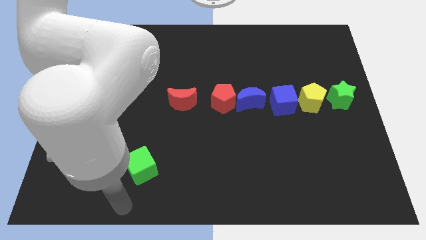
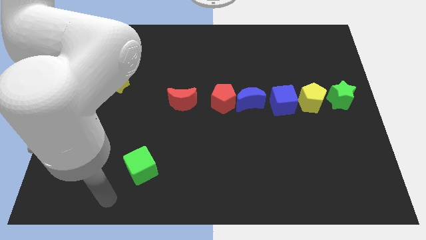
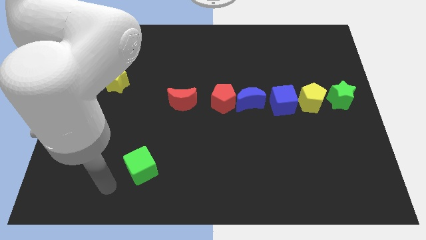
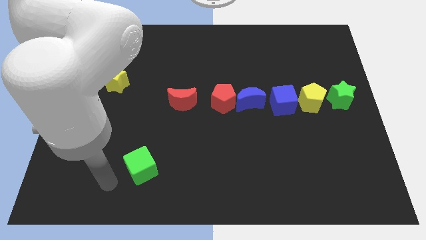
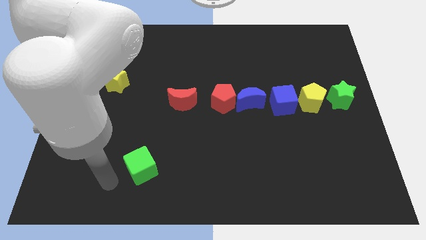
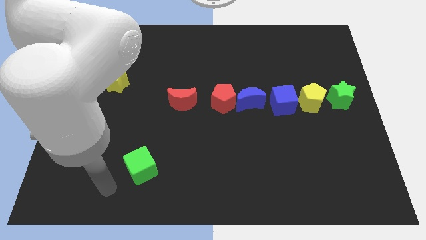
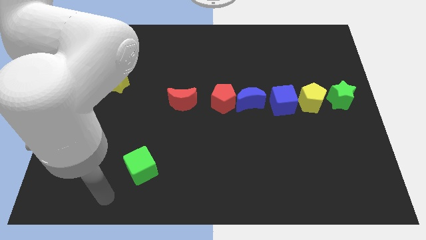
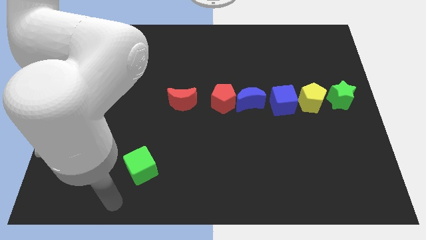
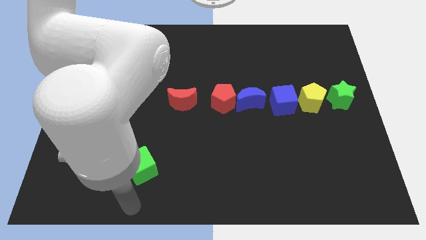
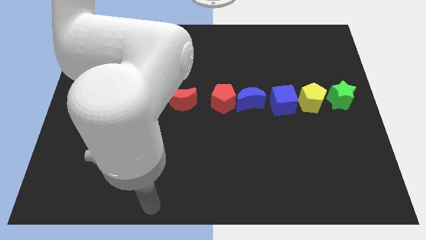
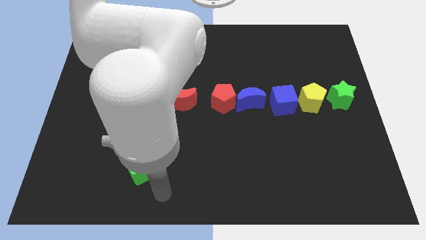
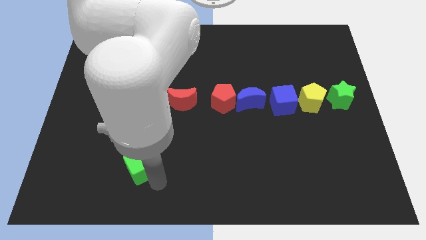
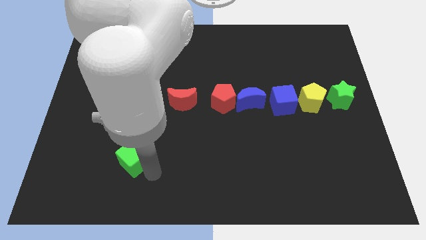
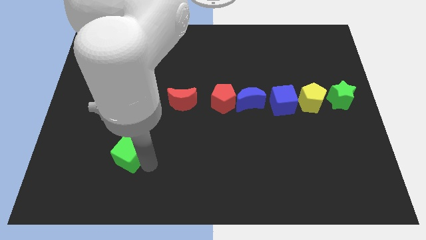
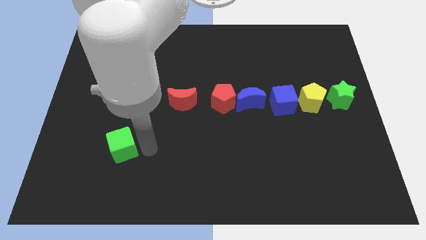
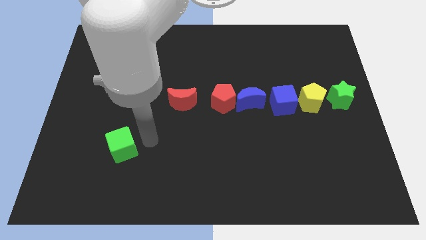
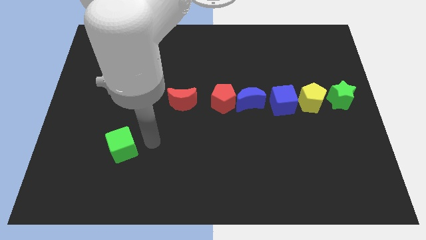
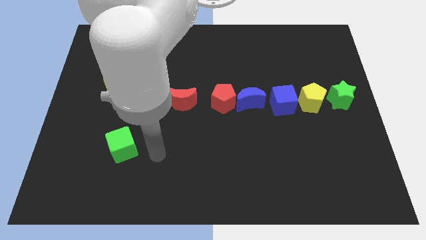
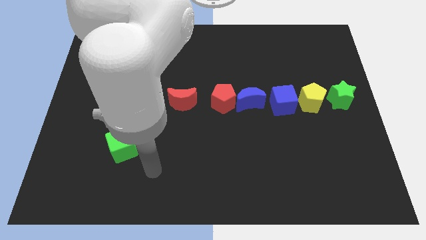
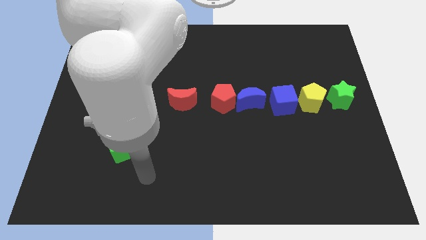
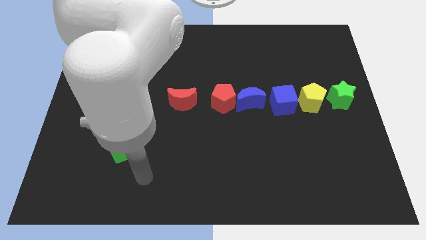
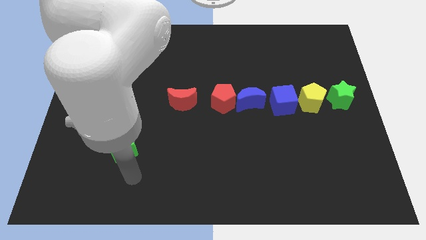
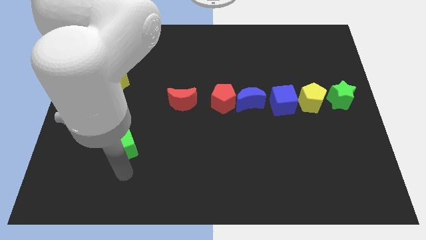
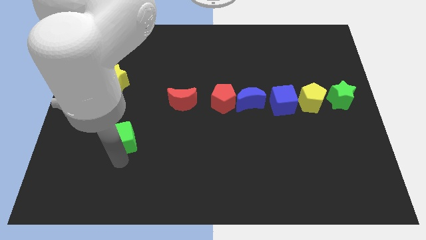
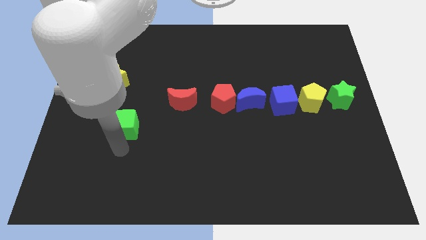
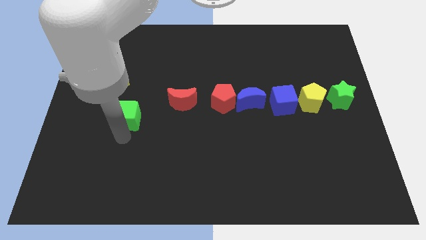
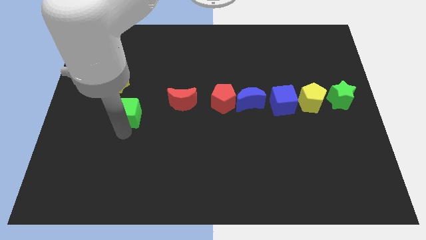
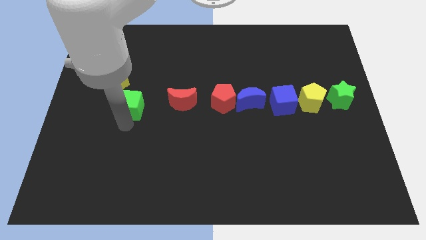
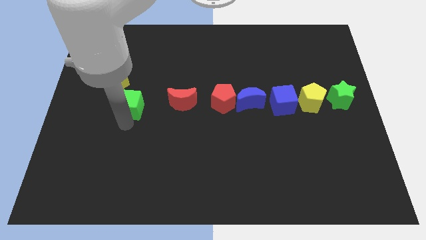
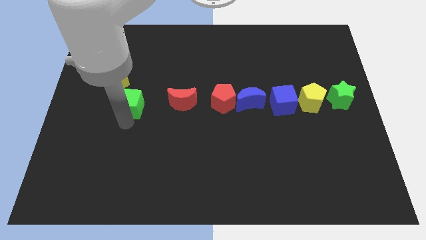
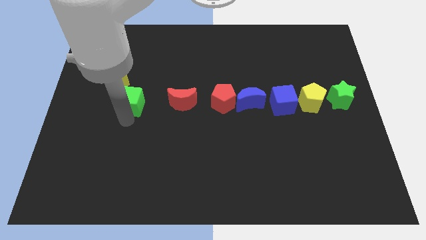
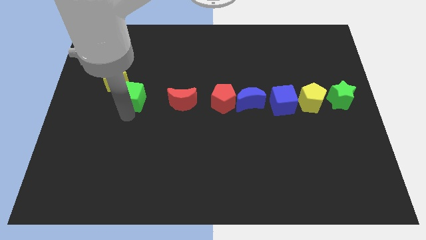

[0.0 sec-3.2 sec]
place the green cube left to the red moon

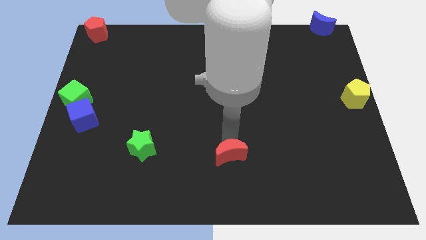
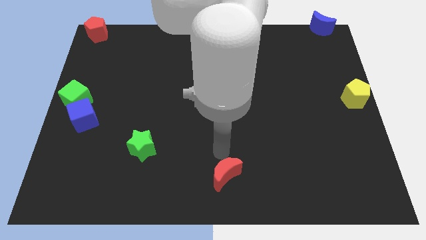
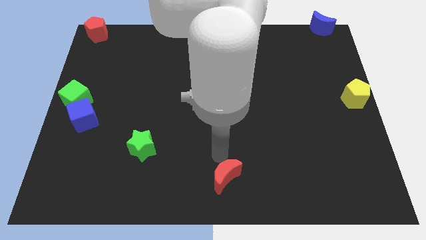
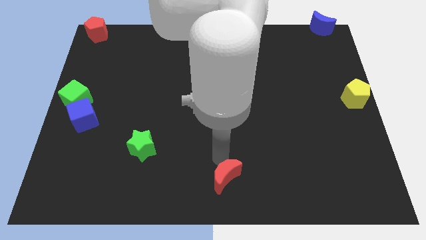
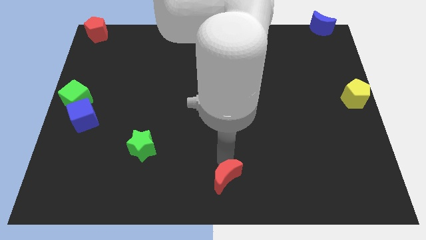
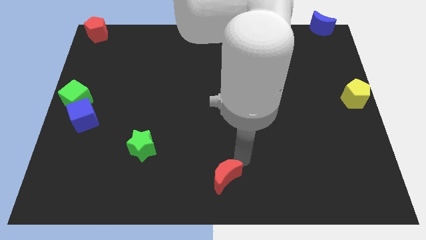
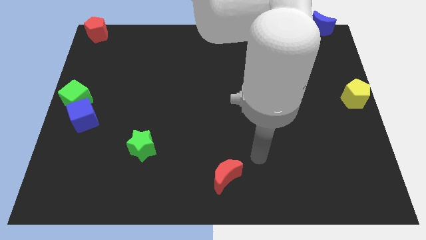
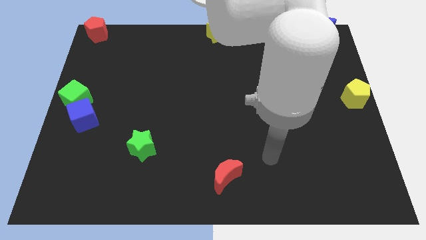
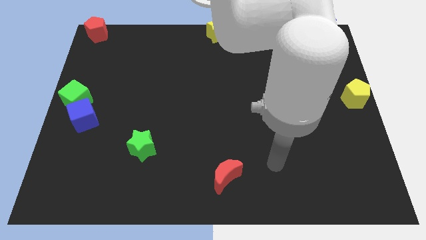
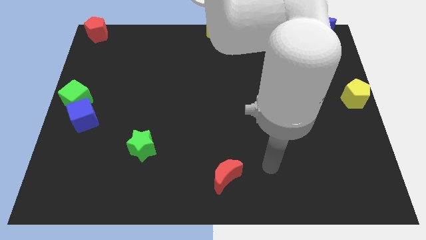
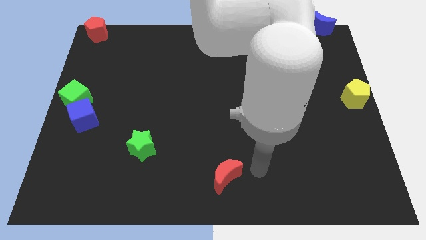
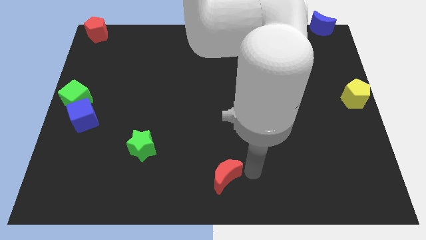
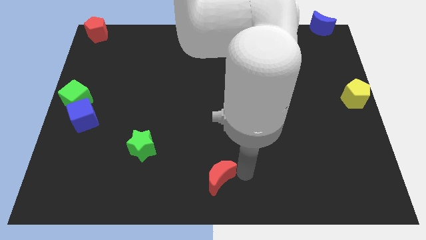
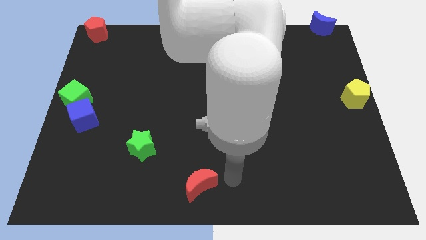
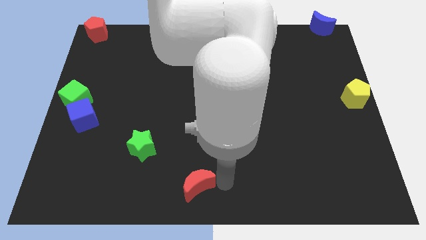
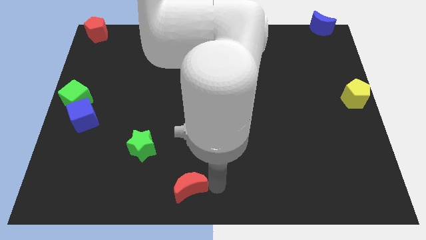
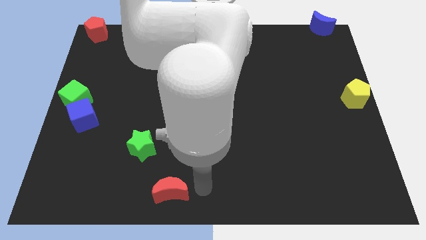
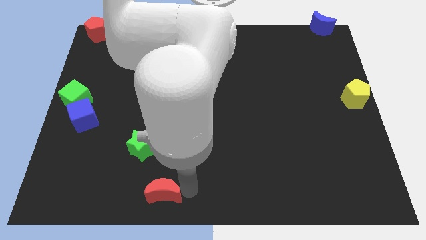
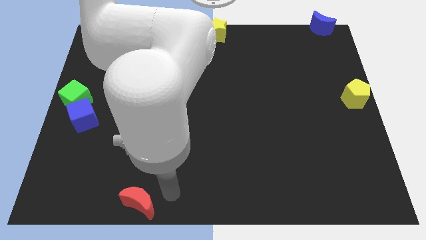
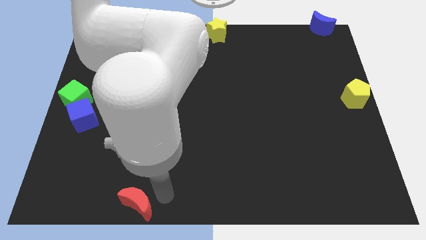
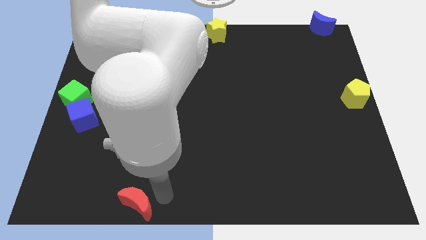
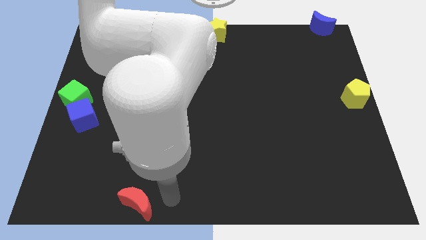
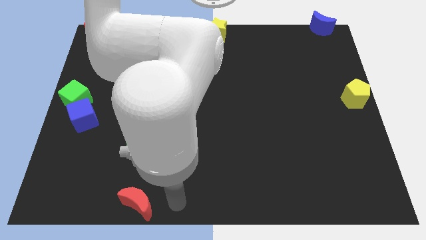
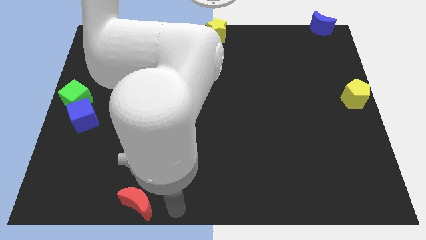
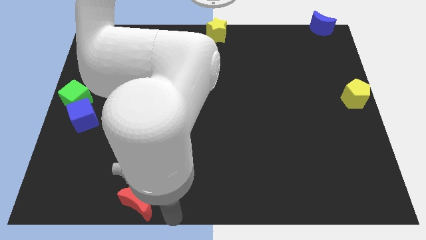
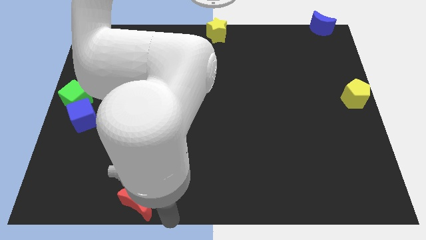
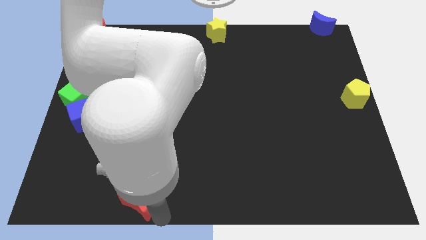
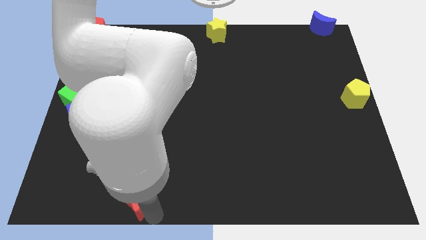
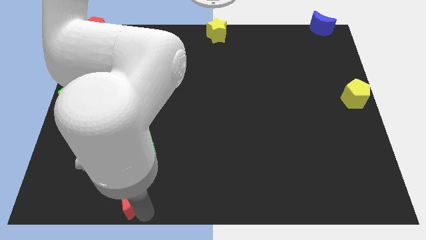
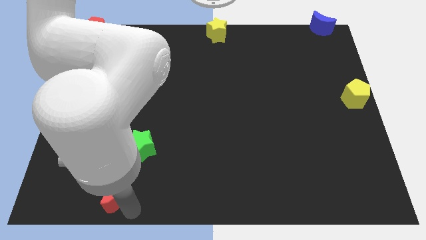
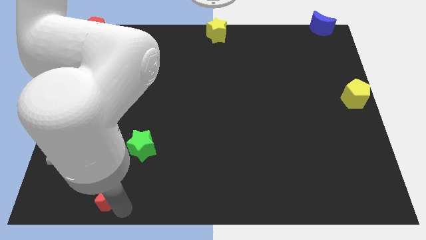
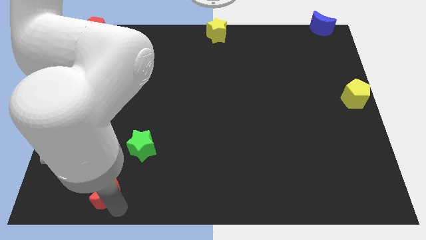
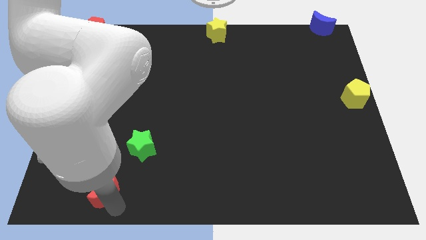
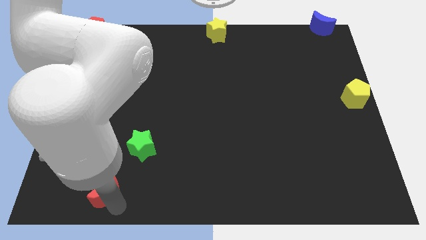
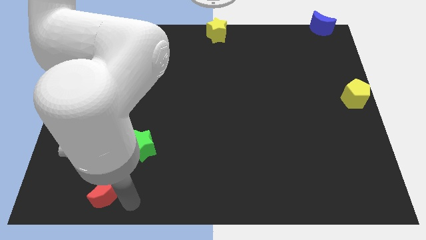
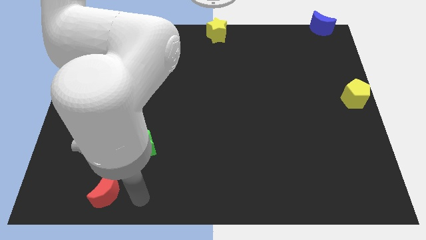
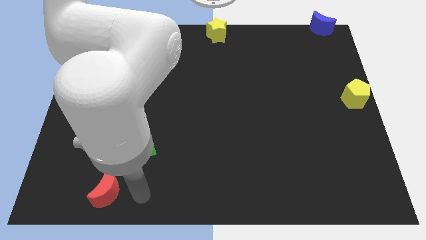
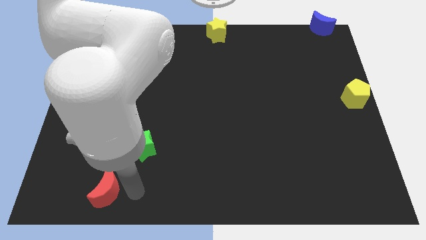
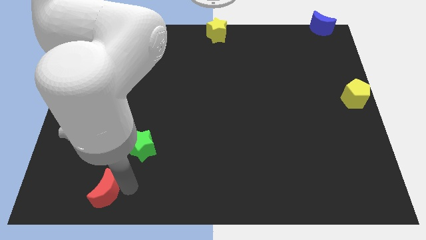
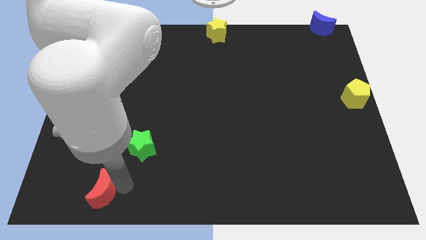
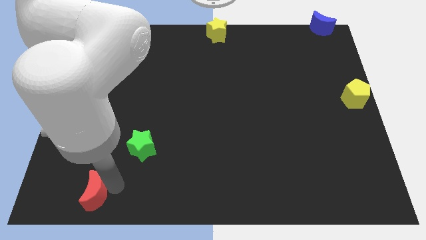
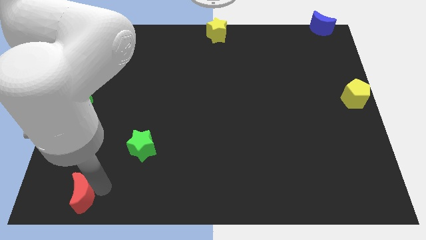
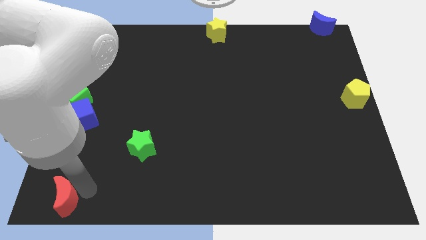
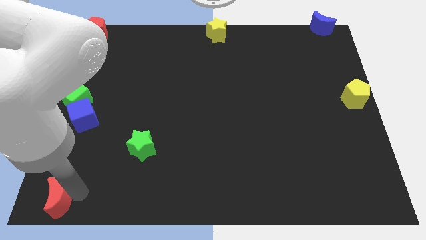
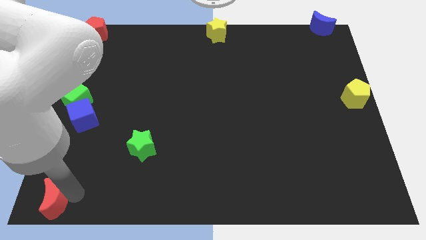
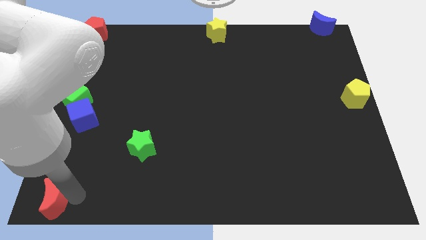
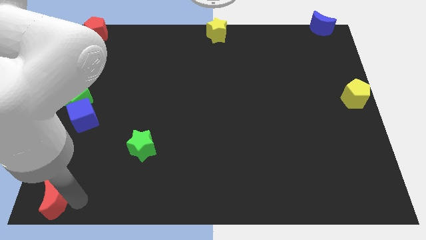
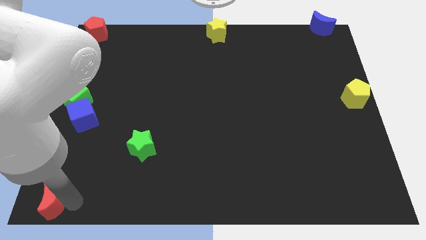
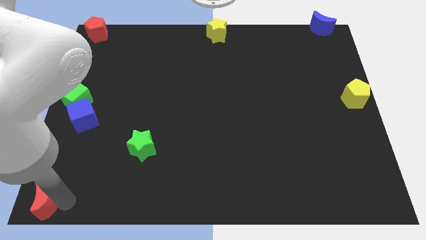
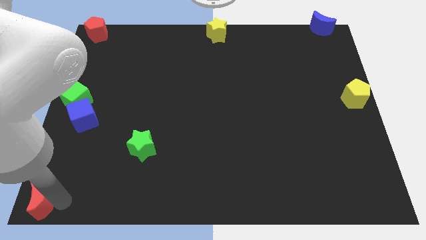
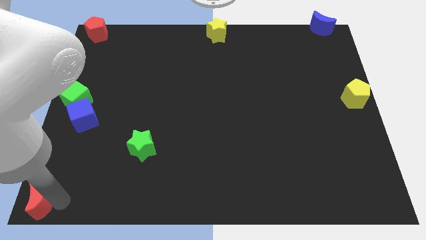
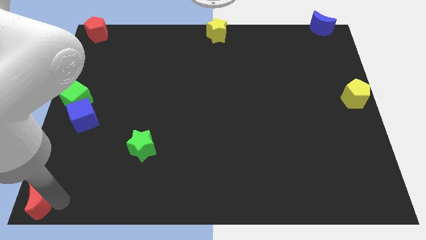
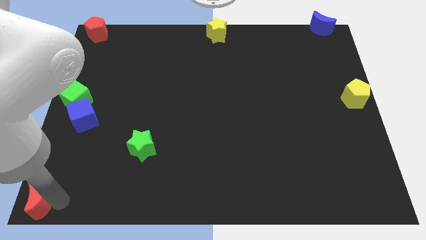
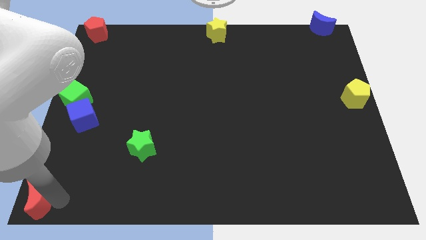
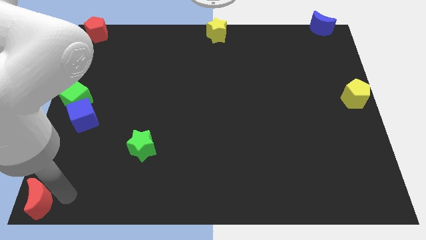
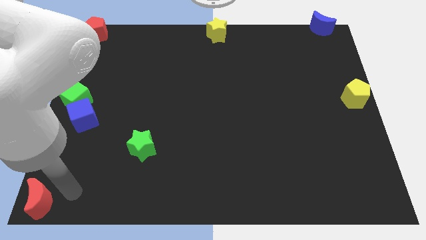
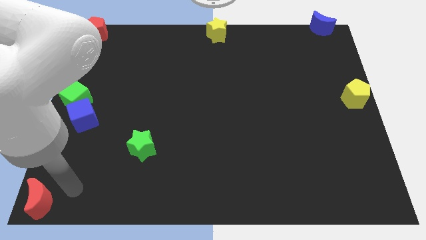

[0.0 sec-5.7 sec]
push the red moon to the bottom left corner of the board
